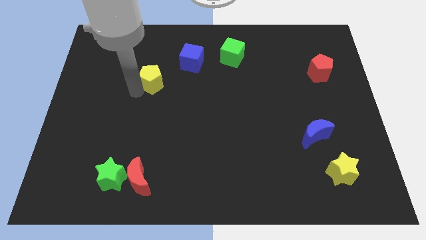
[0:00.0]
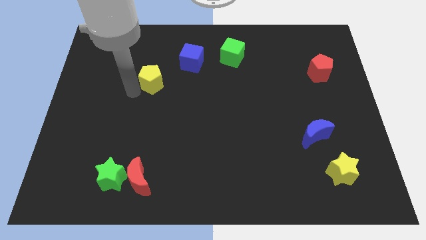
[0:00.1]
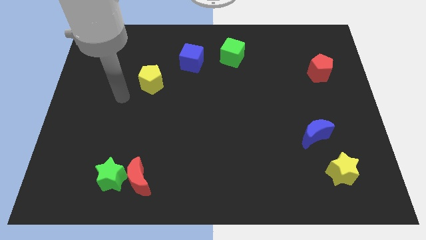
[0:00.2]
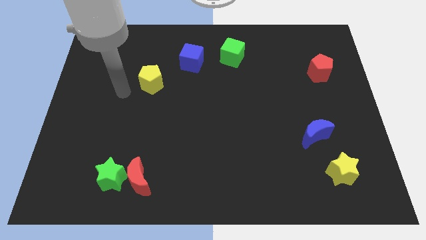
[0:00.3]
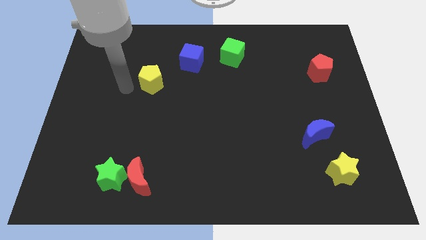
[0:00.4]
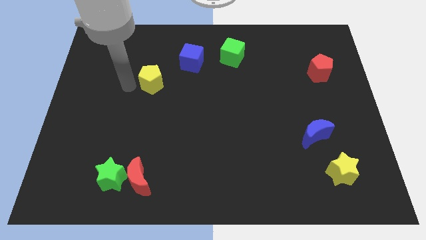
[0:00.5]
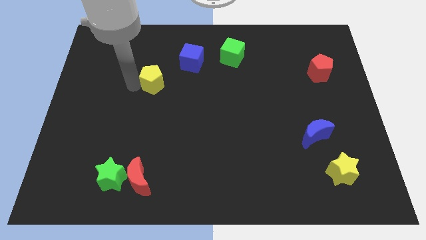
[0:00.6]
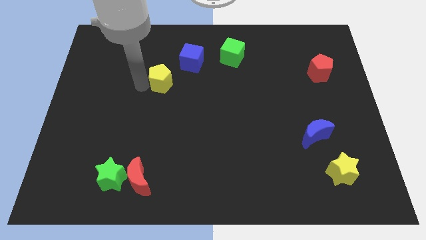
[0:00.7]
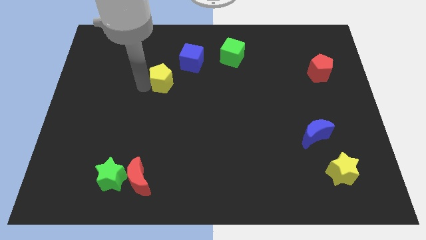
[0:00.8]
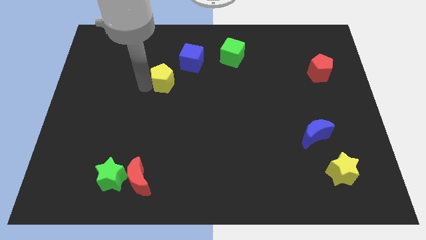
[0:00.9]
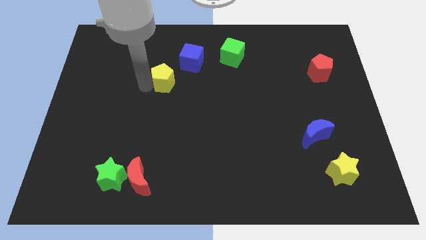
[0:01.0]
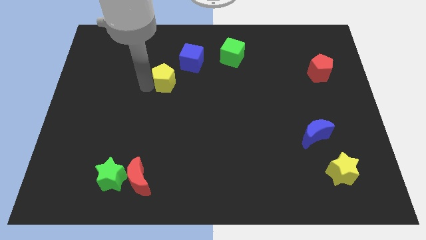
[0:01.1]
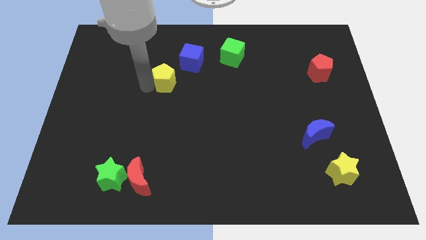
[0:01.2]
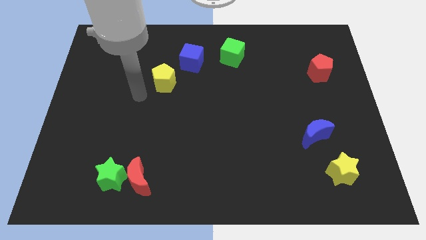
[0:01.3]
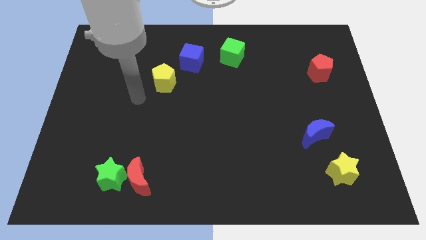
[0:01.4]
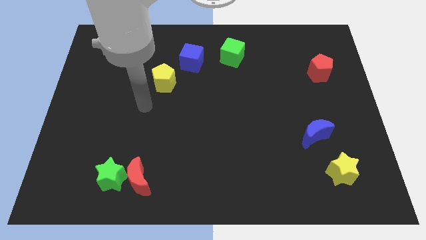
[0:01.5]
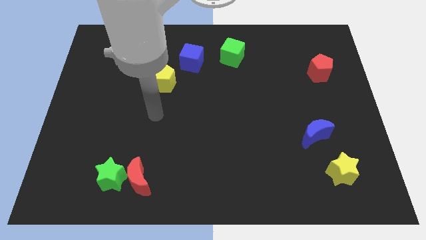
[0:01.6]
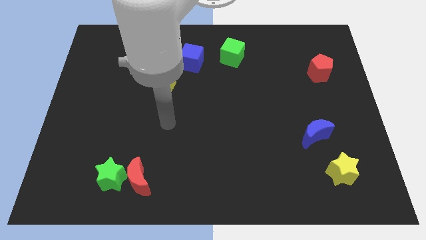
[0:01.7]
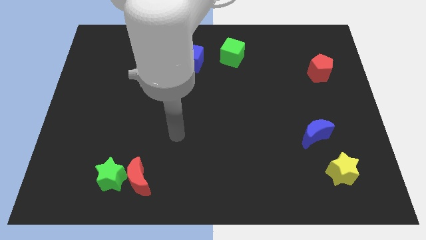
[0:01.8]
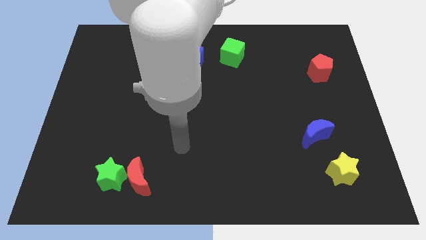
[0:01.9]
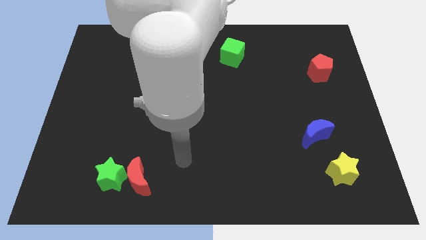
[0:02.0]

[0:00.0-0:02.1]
move the arm at the bottom center

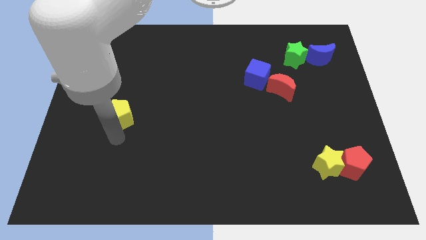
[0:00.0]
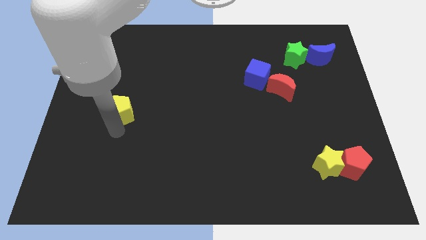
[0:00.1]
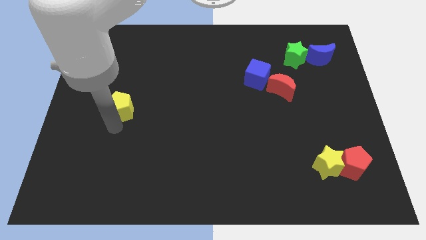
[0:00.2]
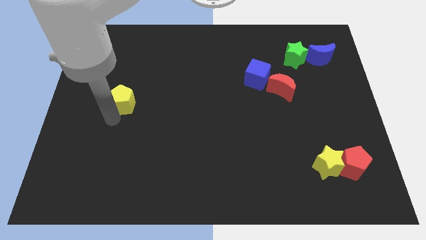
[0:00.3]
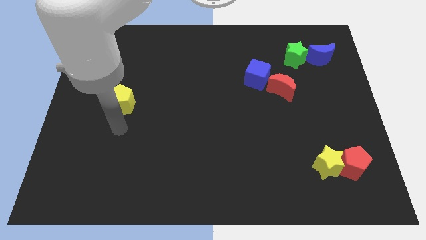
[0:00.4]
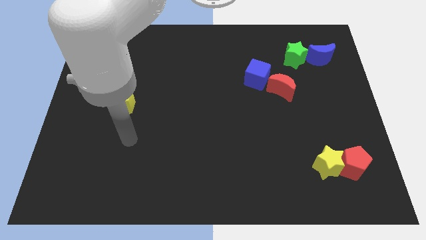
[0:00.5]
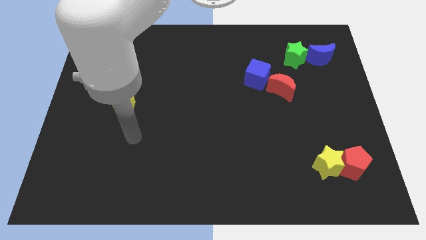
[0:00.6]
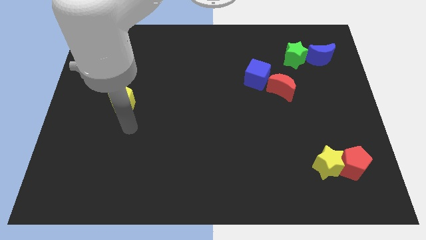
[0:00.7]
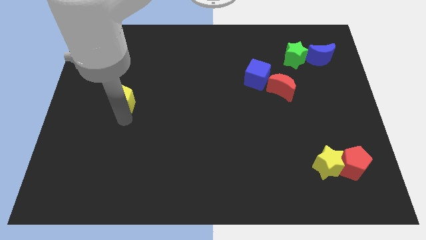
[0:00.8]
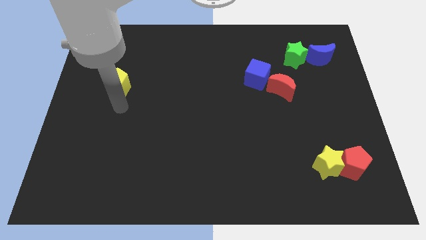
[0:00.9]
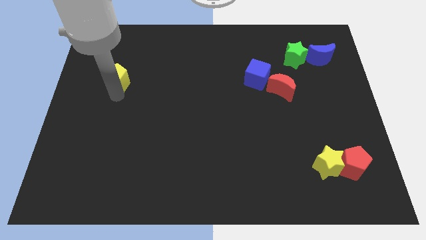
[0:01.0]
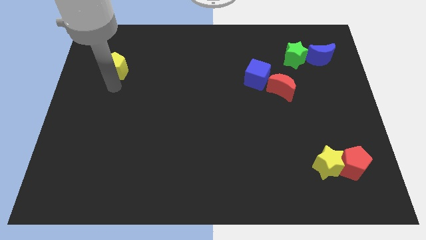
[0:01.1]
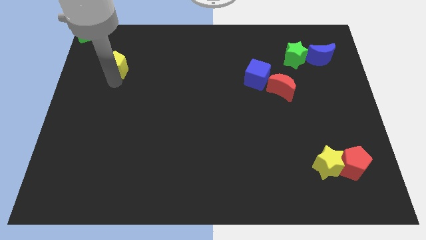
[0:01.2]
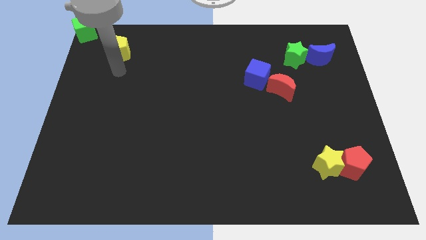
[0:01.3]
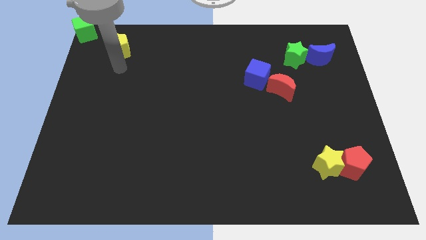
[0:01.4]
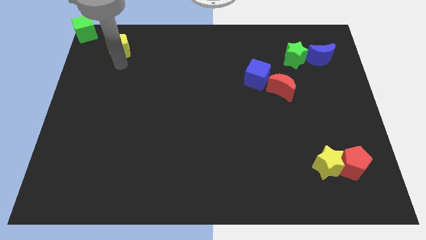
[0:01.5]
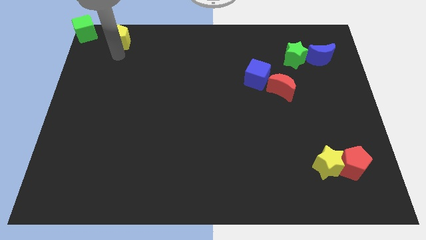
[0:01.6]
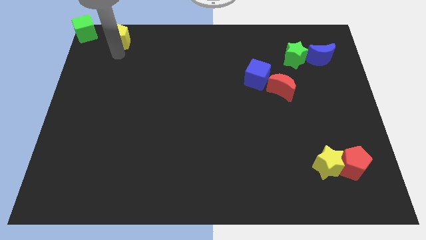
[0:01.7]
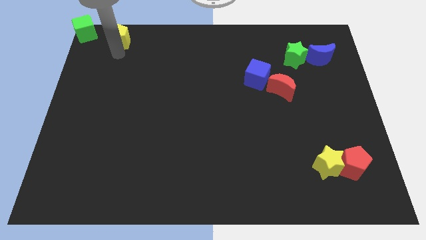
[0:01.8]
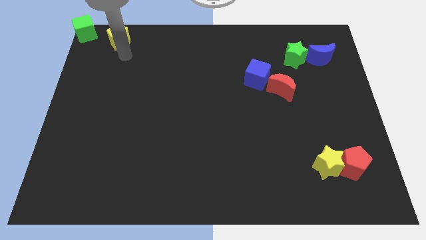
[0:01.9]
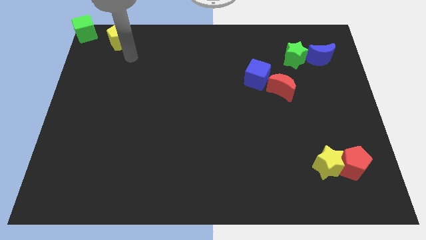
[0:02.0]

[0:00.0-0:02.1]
slide the yellow pentagon to the top left of the board

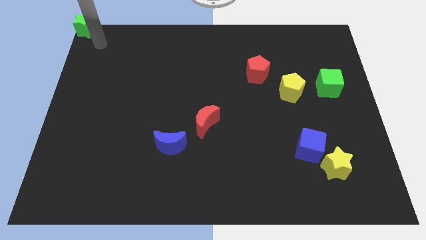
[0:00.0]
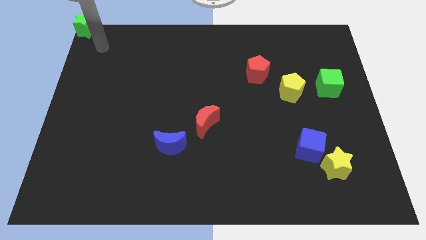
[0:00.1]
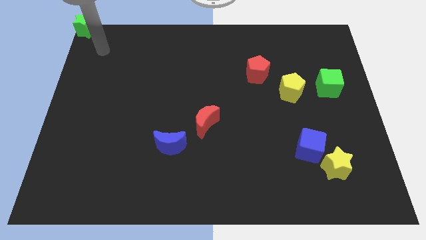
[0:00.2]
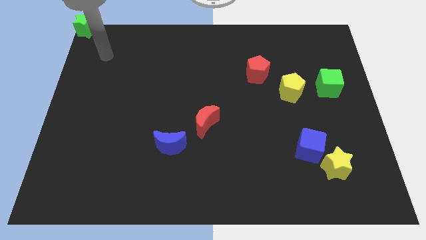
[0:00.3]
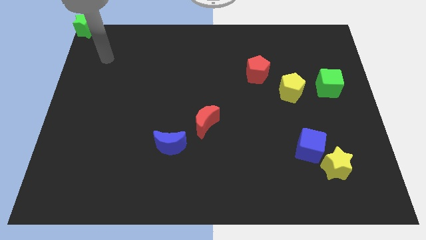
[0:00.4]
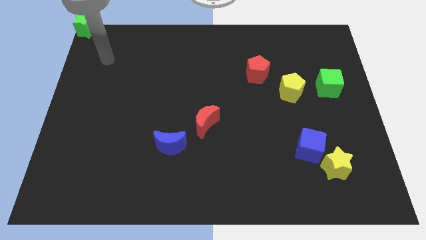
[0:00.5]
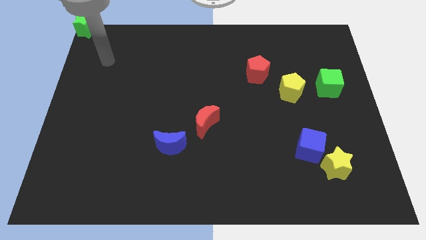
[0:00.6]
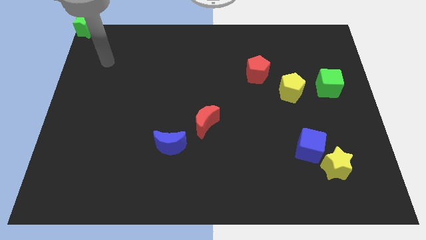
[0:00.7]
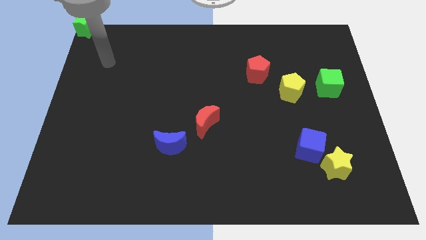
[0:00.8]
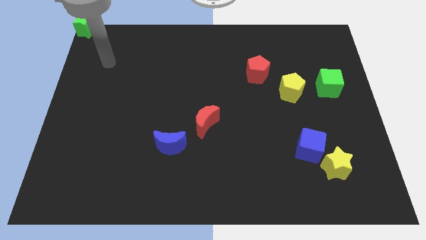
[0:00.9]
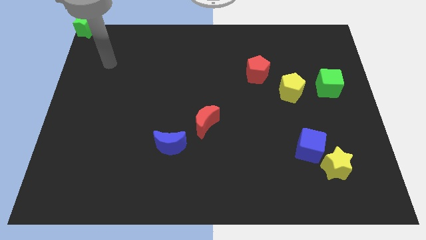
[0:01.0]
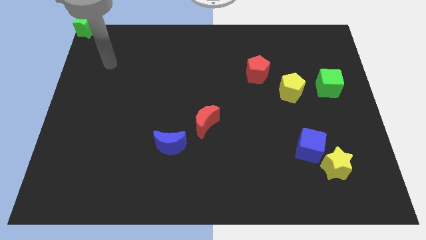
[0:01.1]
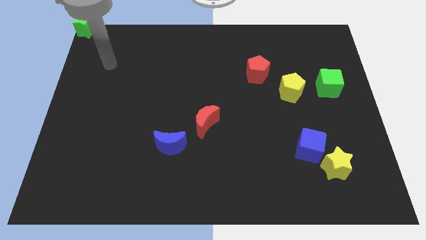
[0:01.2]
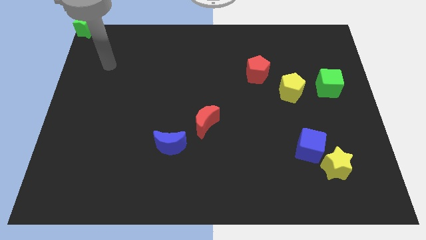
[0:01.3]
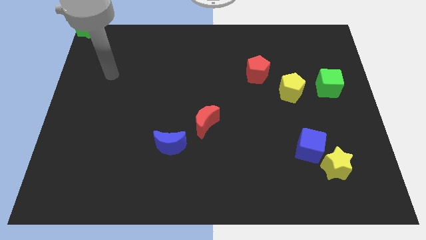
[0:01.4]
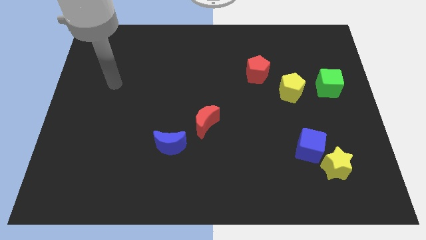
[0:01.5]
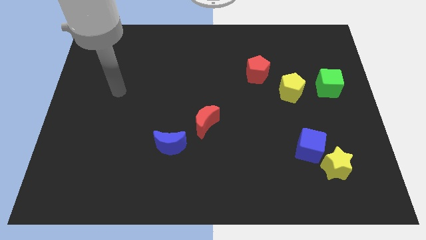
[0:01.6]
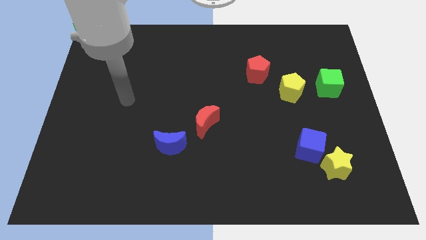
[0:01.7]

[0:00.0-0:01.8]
move your arm away from green star

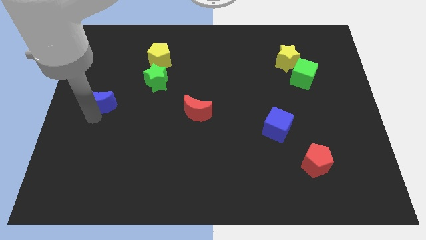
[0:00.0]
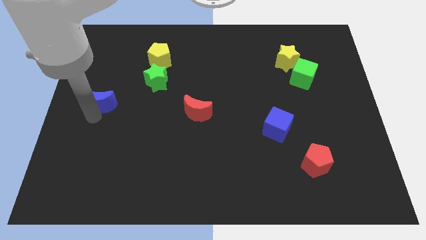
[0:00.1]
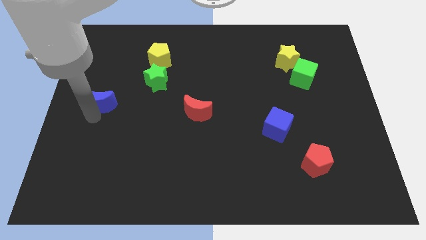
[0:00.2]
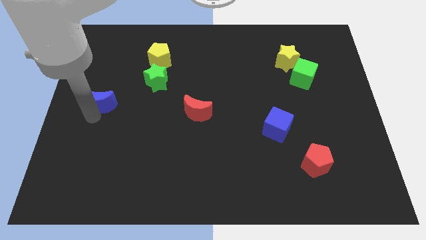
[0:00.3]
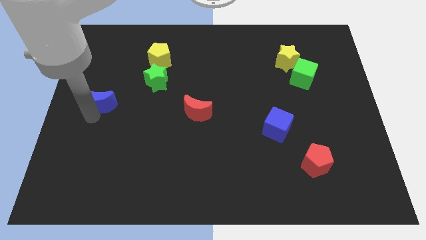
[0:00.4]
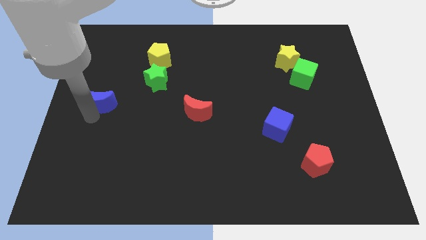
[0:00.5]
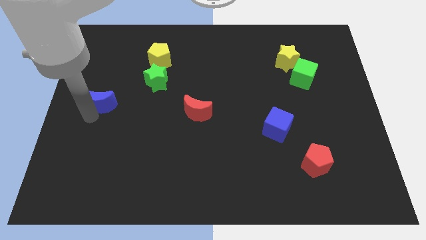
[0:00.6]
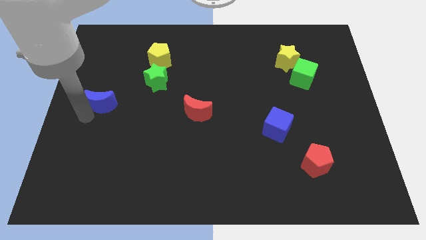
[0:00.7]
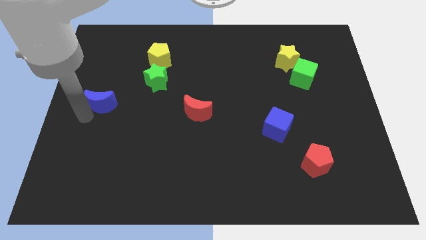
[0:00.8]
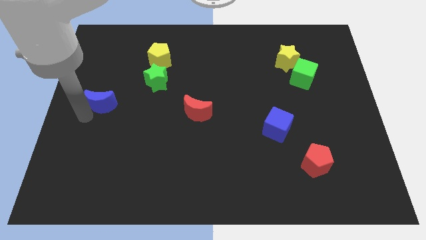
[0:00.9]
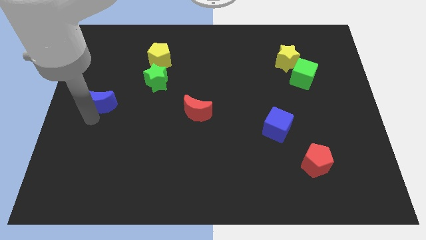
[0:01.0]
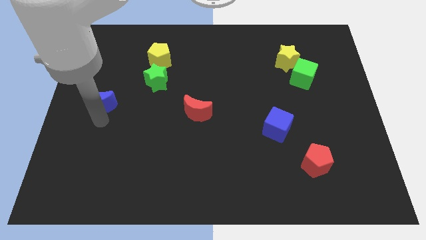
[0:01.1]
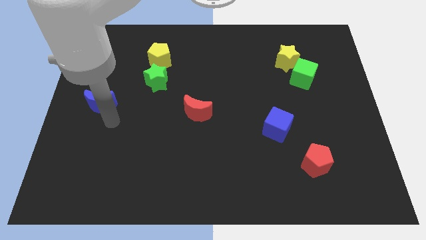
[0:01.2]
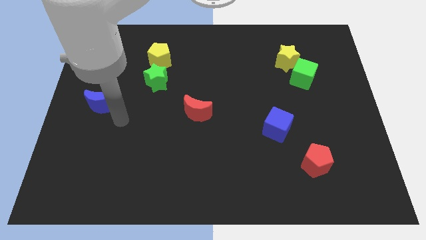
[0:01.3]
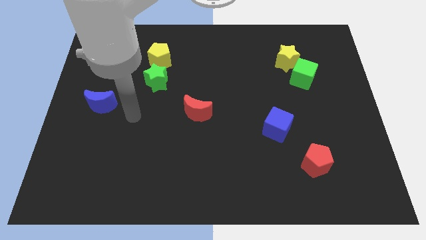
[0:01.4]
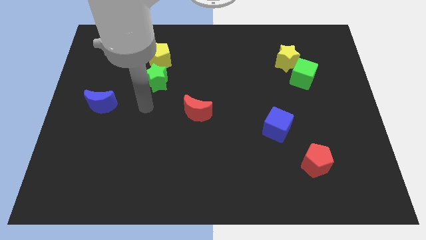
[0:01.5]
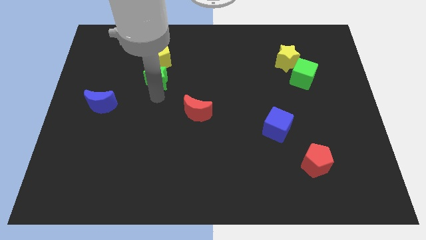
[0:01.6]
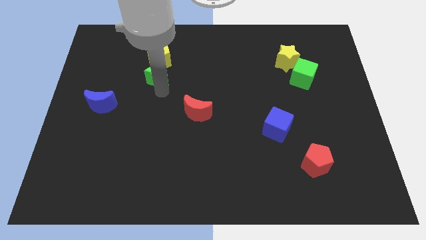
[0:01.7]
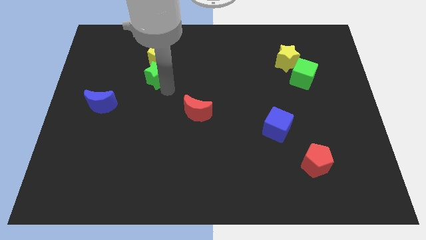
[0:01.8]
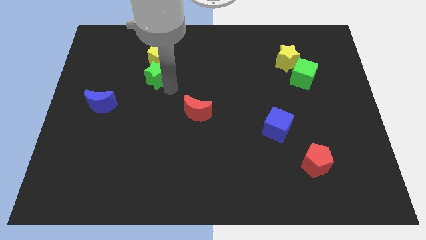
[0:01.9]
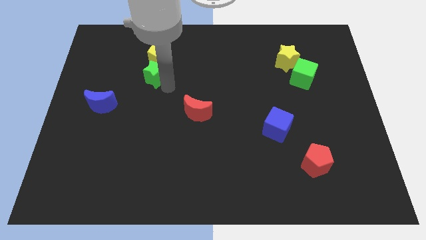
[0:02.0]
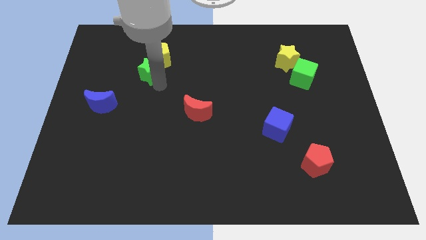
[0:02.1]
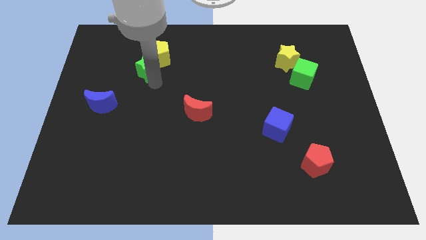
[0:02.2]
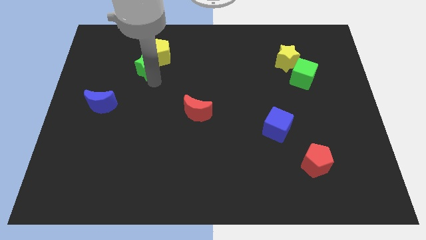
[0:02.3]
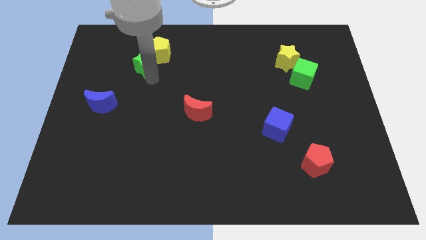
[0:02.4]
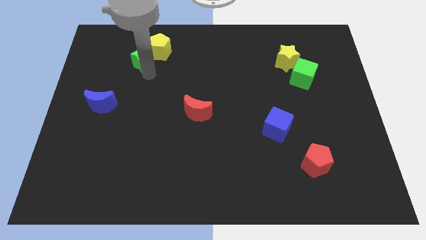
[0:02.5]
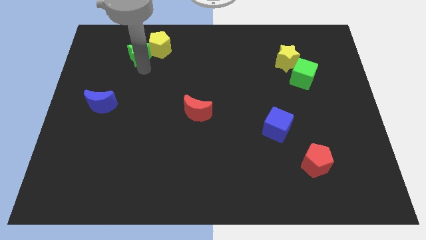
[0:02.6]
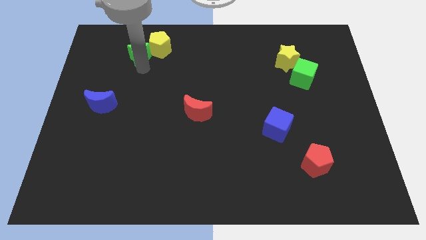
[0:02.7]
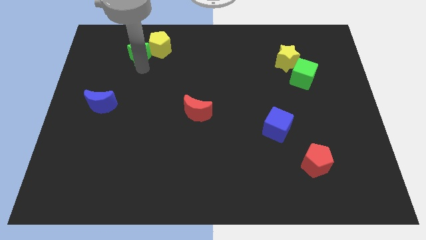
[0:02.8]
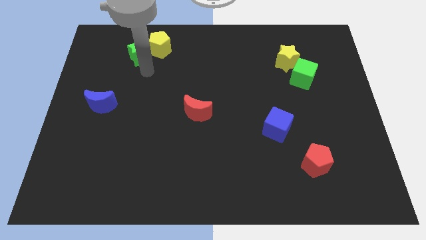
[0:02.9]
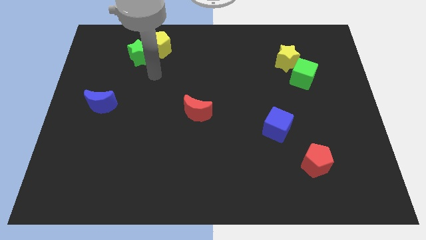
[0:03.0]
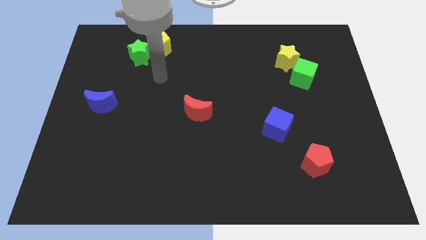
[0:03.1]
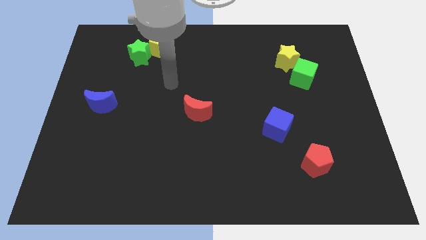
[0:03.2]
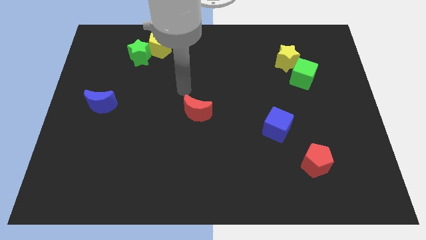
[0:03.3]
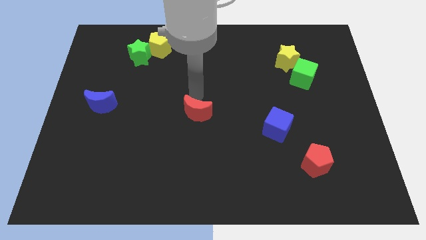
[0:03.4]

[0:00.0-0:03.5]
push the green star into the yellow pentagon
